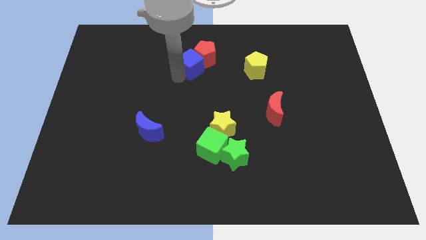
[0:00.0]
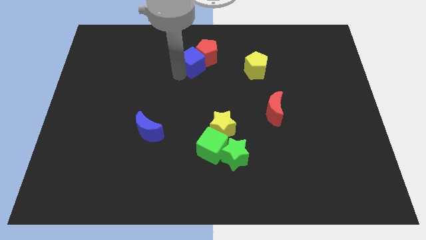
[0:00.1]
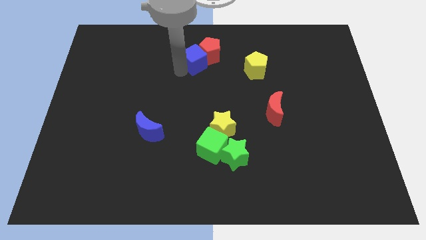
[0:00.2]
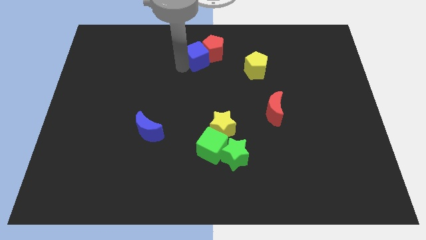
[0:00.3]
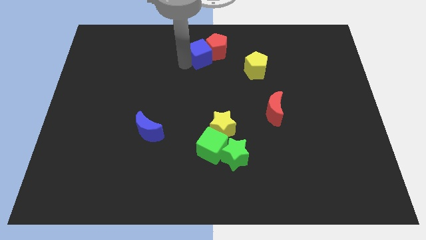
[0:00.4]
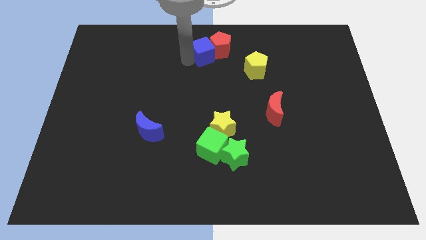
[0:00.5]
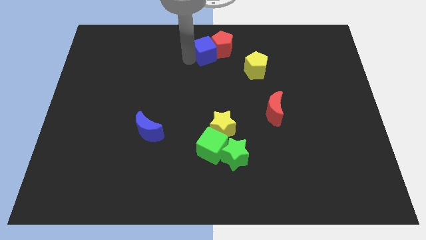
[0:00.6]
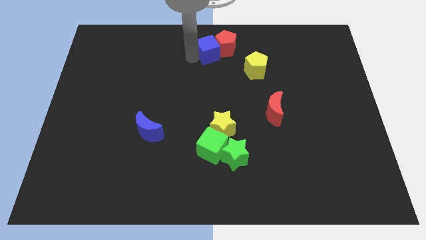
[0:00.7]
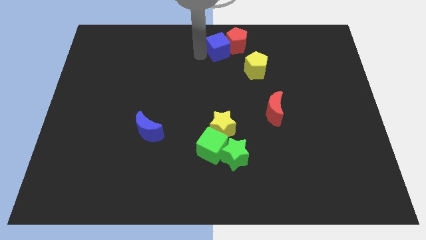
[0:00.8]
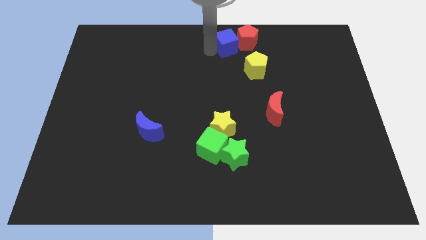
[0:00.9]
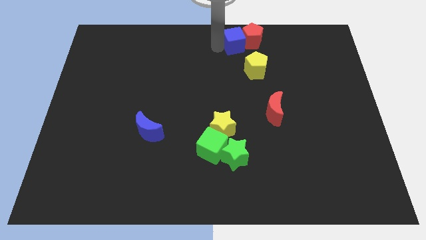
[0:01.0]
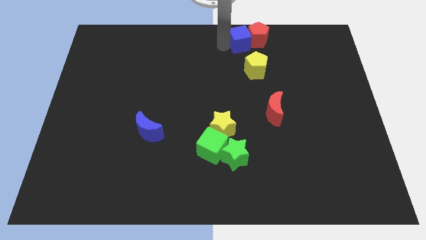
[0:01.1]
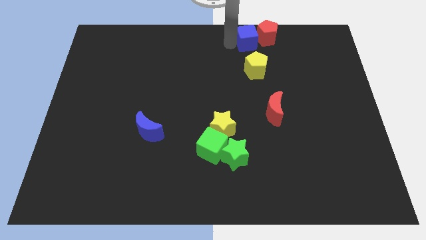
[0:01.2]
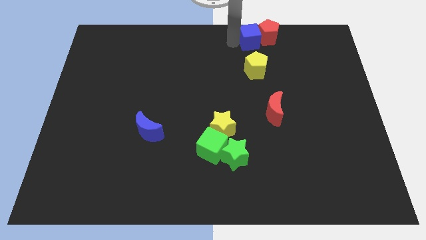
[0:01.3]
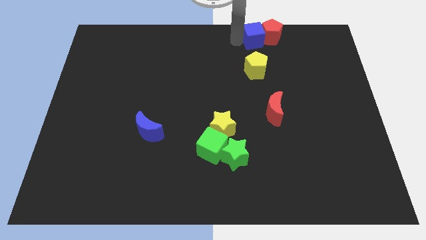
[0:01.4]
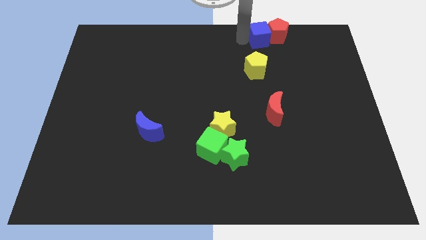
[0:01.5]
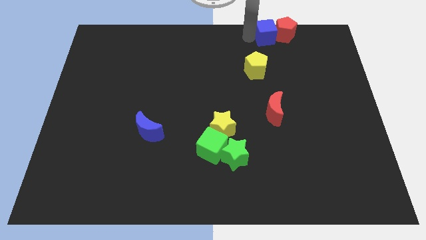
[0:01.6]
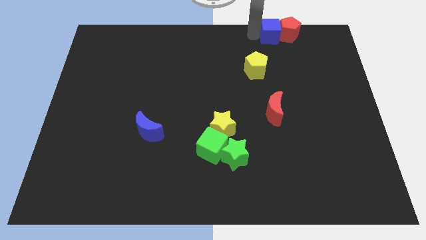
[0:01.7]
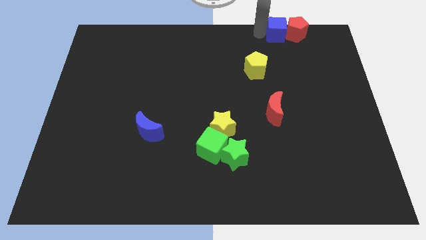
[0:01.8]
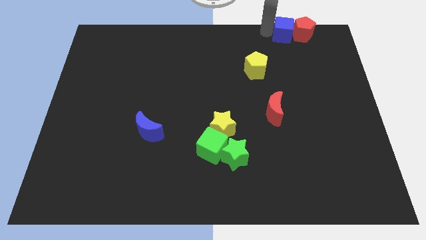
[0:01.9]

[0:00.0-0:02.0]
move the red pentagon along with blue cube towards the right corner of board

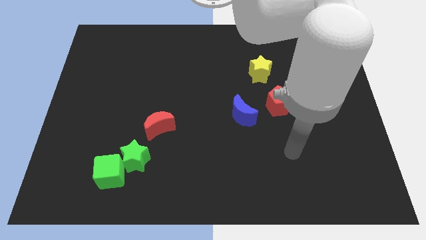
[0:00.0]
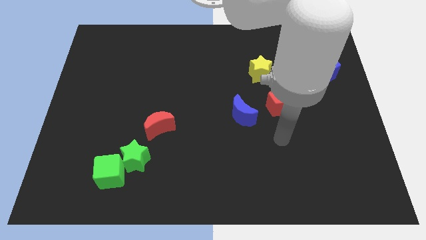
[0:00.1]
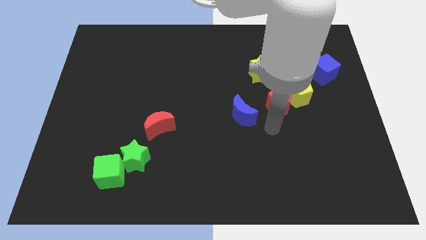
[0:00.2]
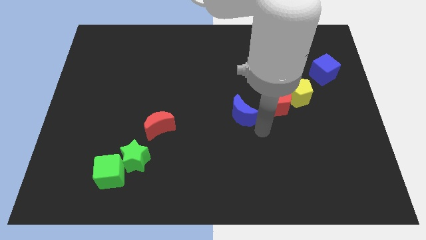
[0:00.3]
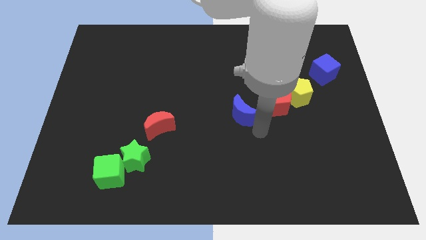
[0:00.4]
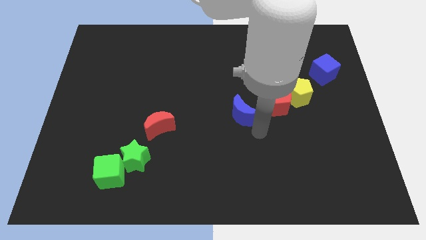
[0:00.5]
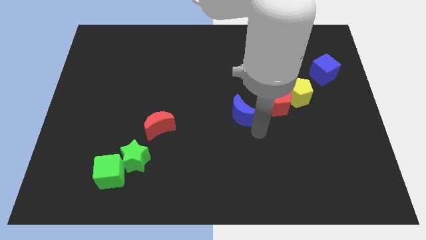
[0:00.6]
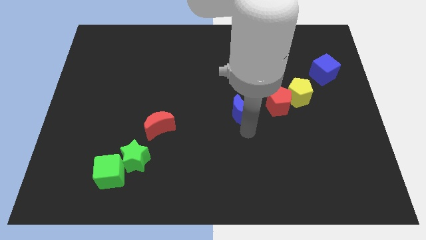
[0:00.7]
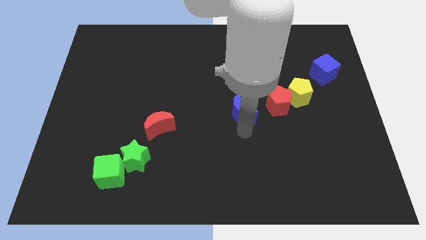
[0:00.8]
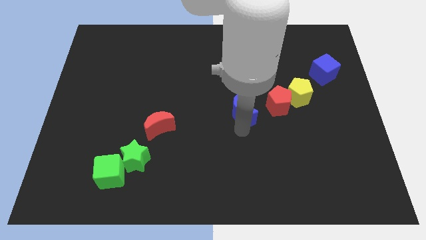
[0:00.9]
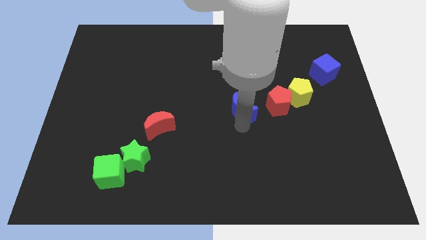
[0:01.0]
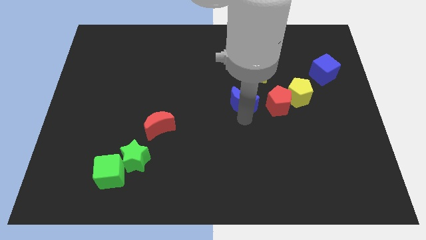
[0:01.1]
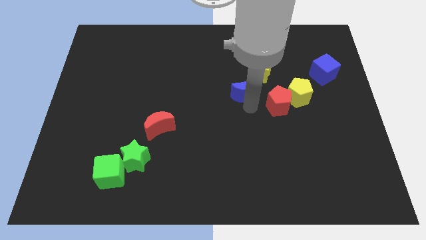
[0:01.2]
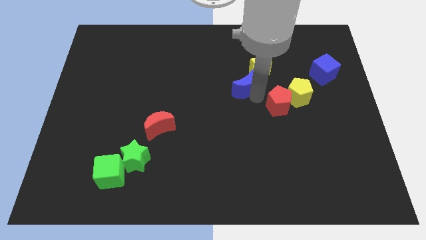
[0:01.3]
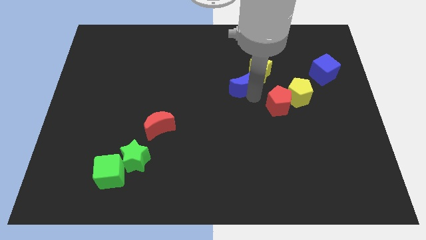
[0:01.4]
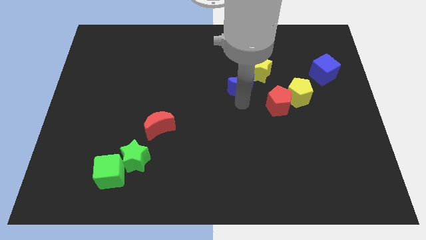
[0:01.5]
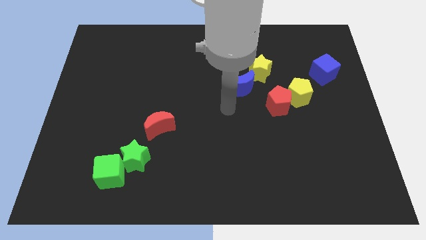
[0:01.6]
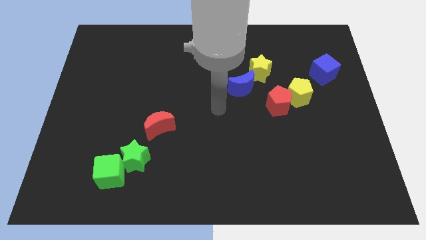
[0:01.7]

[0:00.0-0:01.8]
push the blue moon upwards slightly

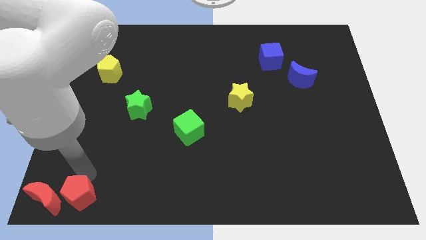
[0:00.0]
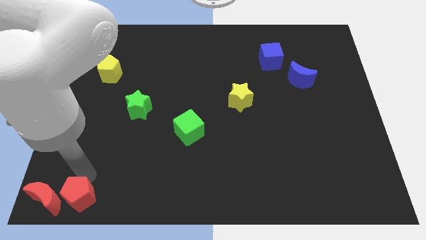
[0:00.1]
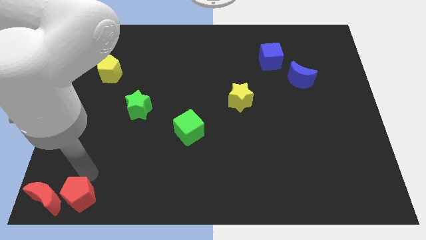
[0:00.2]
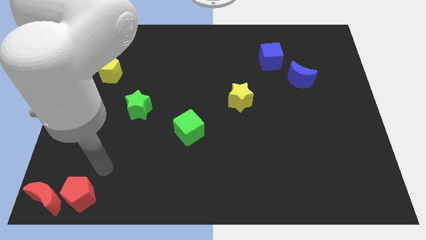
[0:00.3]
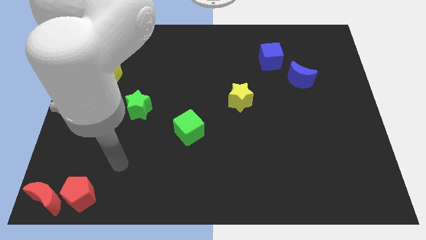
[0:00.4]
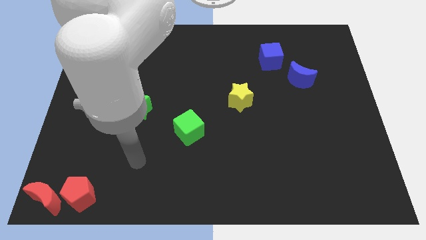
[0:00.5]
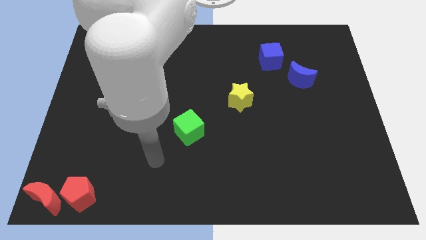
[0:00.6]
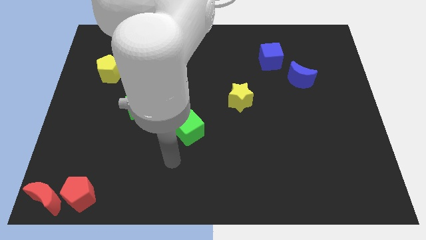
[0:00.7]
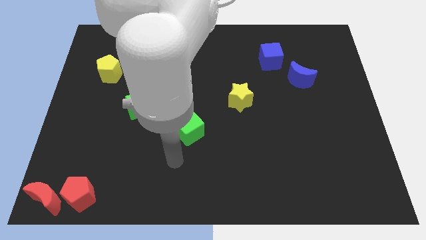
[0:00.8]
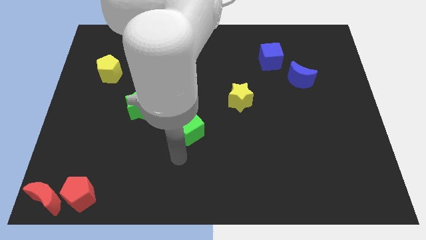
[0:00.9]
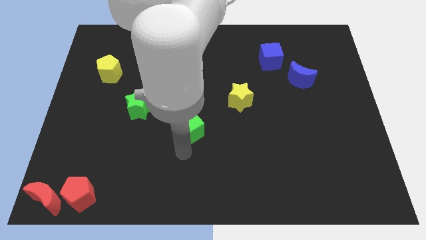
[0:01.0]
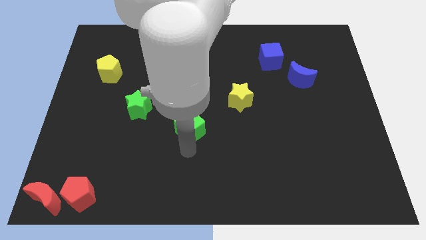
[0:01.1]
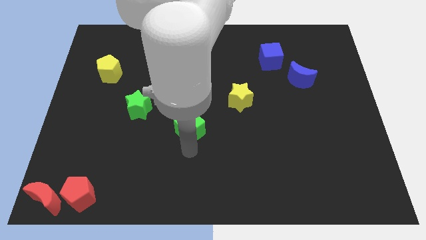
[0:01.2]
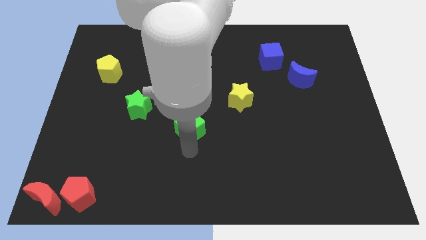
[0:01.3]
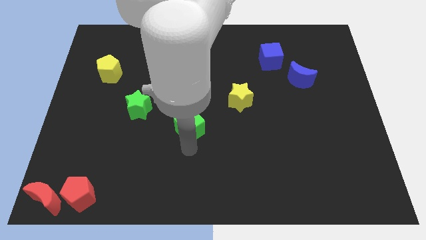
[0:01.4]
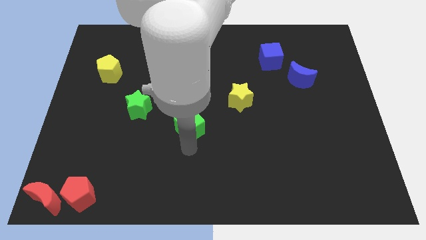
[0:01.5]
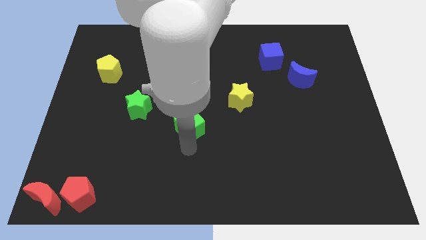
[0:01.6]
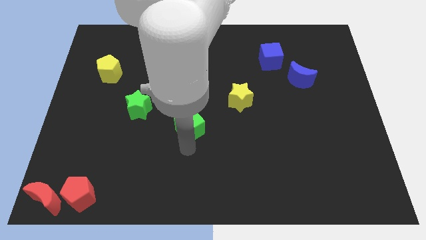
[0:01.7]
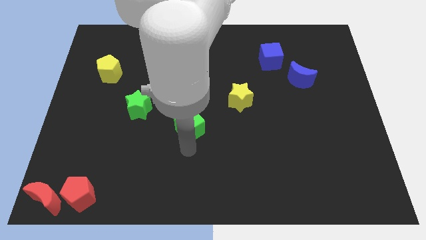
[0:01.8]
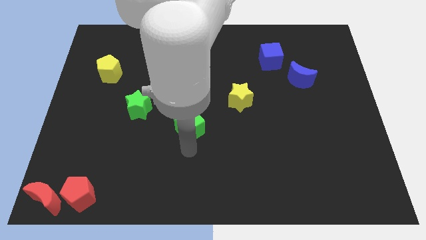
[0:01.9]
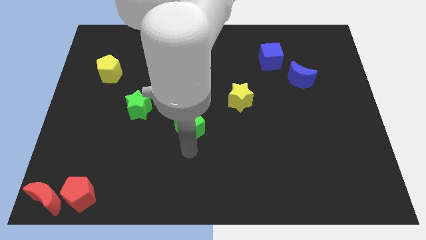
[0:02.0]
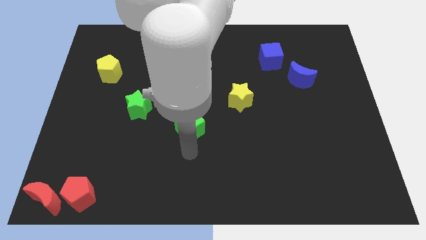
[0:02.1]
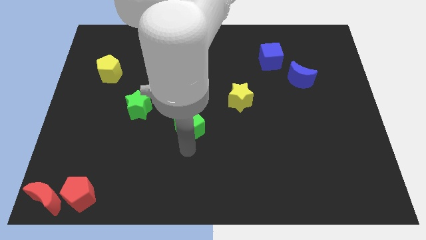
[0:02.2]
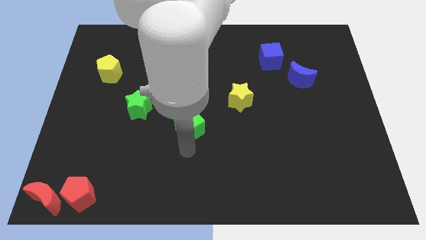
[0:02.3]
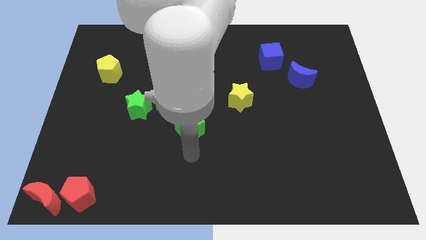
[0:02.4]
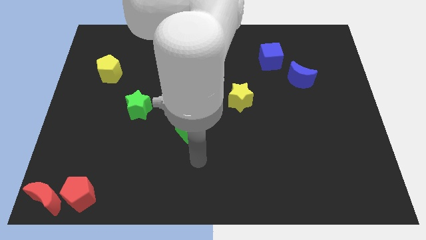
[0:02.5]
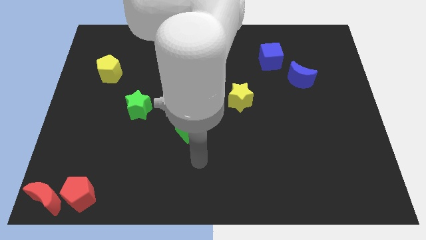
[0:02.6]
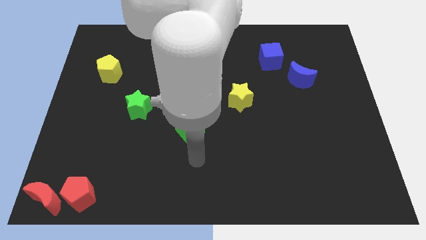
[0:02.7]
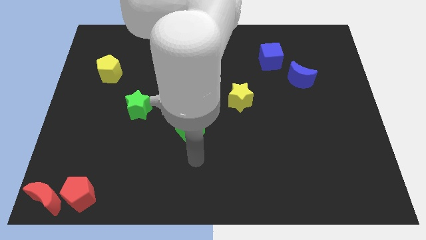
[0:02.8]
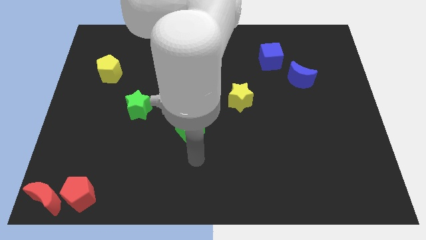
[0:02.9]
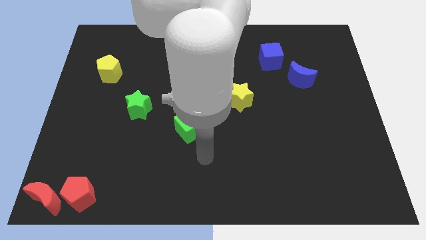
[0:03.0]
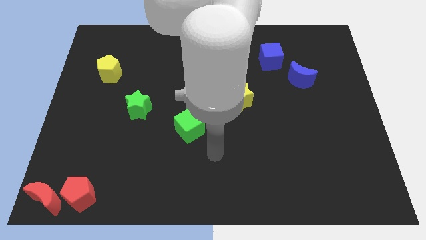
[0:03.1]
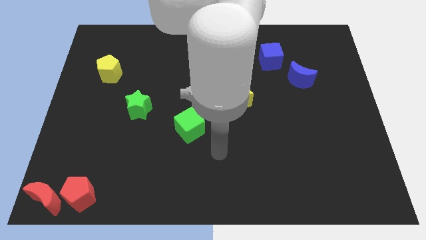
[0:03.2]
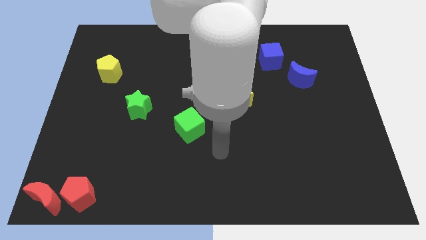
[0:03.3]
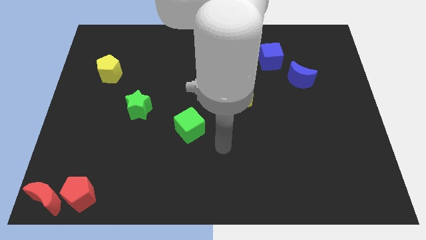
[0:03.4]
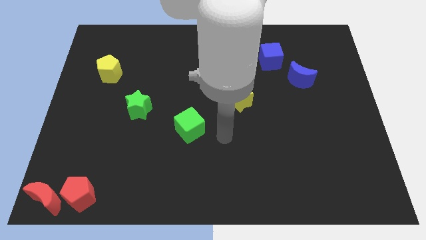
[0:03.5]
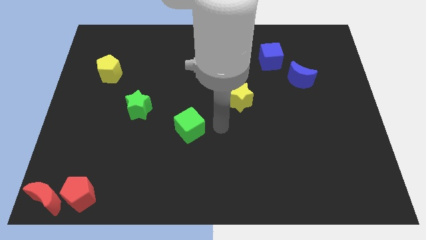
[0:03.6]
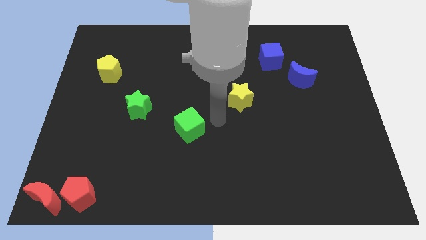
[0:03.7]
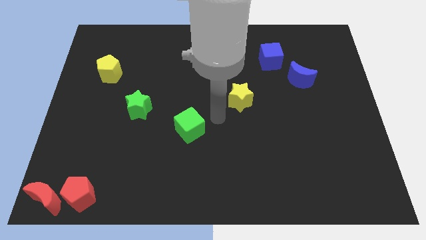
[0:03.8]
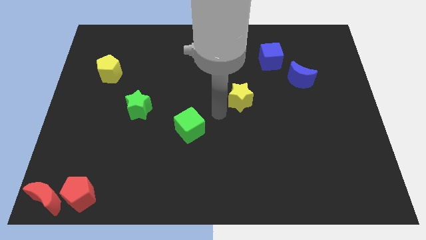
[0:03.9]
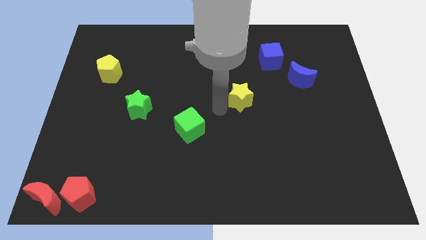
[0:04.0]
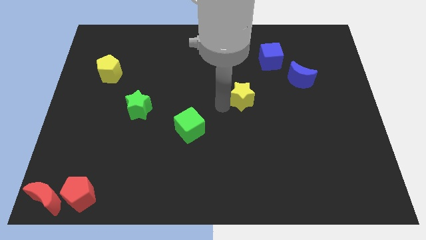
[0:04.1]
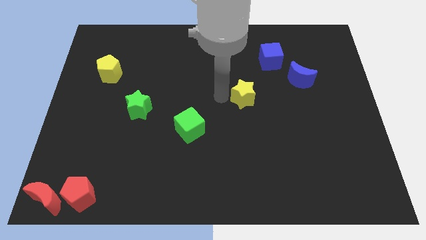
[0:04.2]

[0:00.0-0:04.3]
place the arm to the left of the yellow star

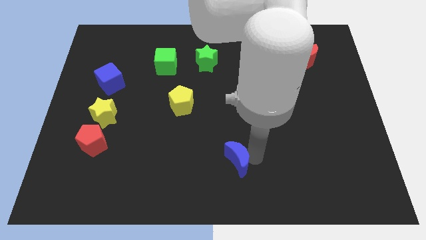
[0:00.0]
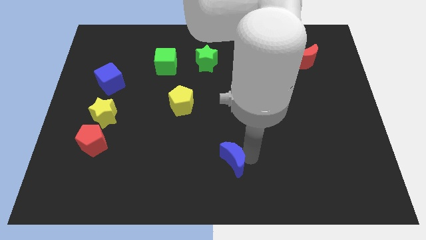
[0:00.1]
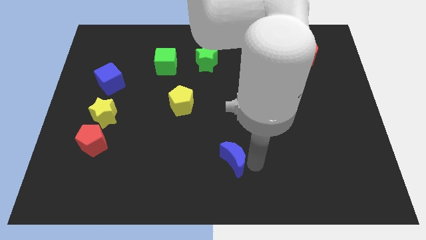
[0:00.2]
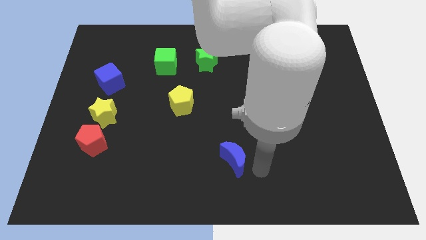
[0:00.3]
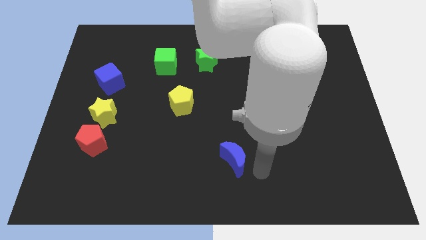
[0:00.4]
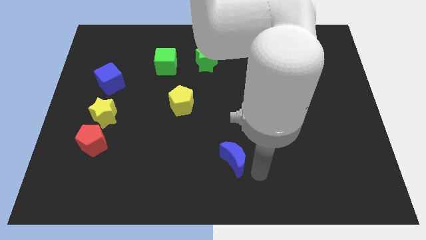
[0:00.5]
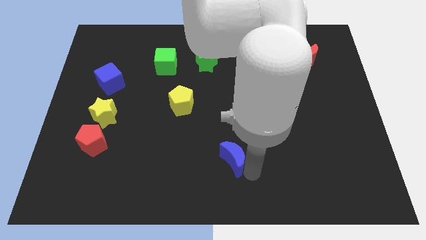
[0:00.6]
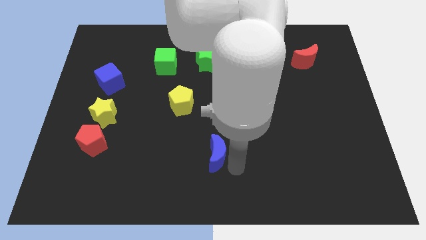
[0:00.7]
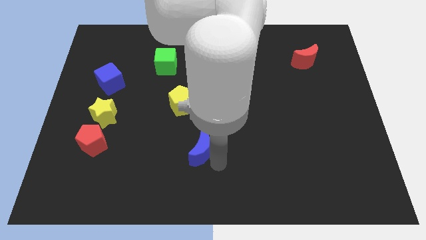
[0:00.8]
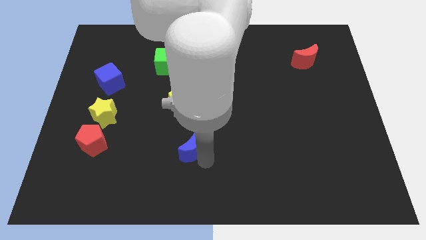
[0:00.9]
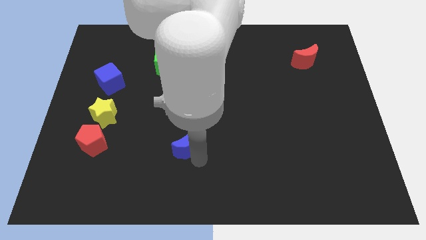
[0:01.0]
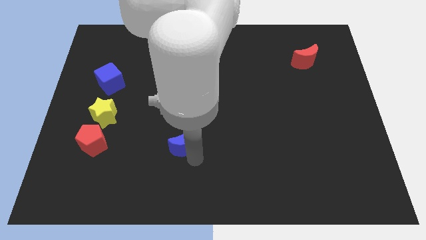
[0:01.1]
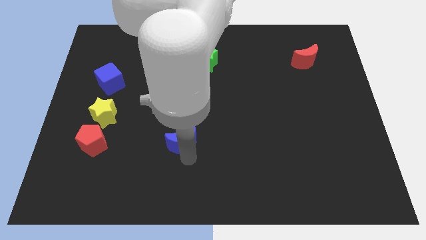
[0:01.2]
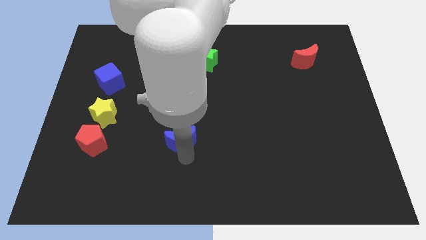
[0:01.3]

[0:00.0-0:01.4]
place the blue moon below the yellow pentagon
